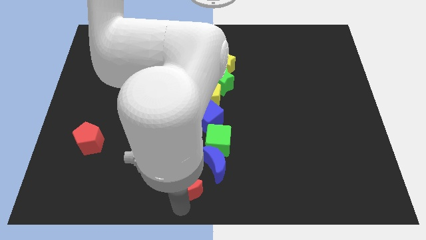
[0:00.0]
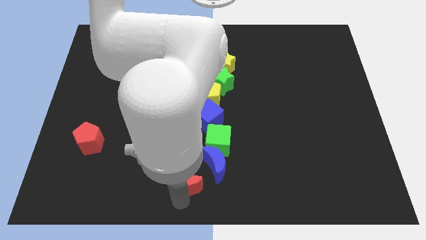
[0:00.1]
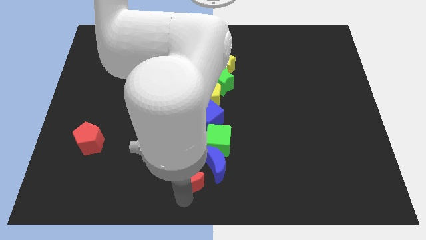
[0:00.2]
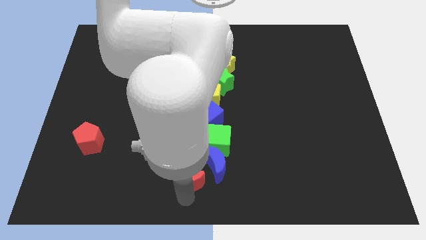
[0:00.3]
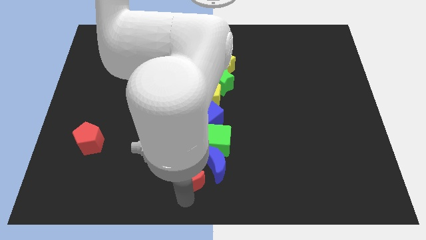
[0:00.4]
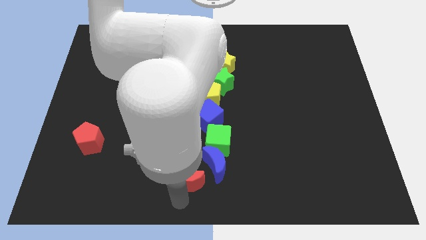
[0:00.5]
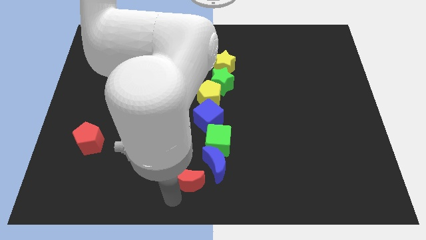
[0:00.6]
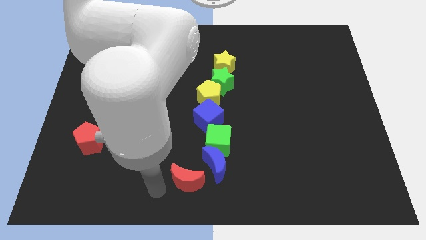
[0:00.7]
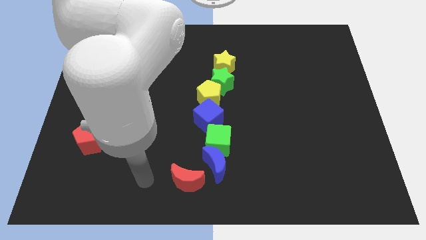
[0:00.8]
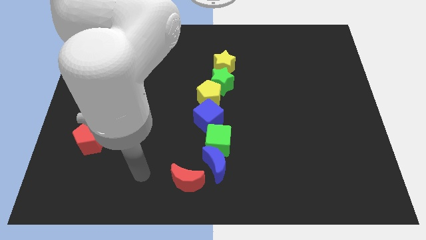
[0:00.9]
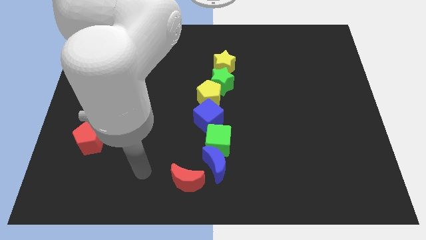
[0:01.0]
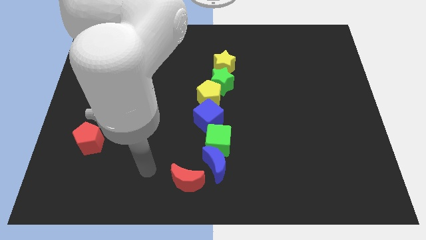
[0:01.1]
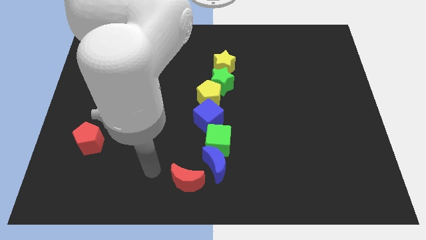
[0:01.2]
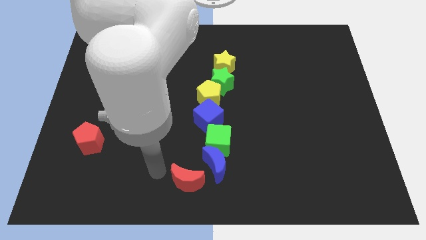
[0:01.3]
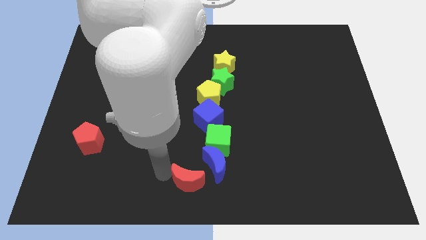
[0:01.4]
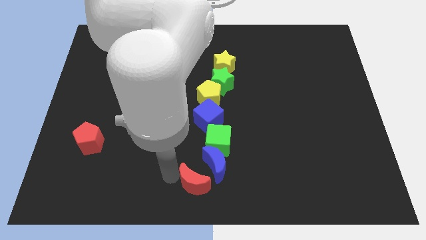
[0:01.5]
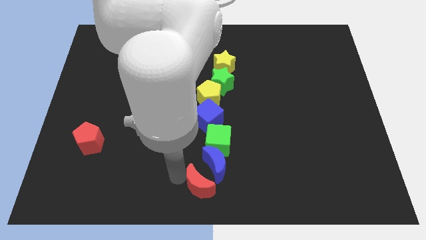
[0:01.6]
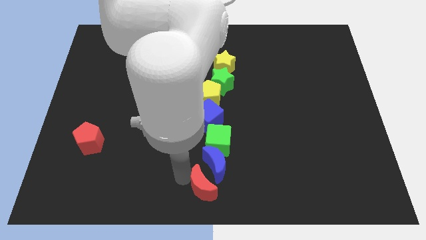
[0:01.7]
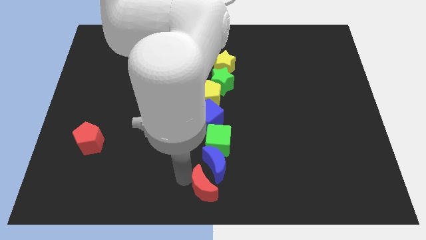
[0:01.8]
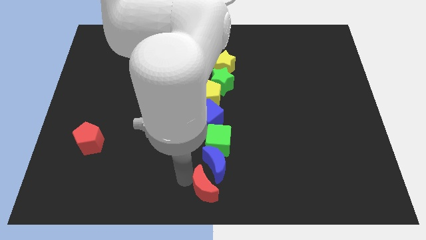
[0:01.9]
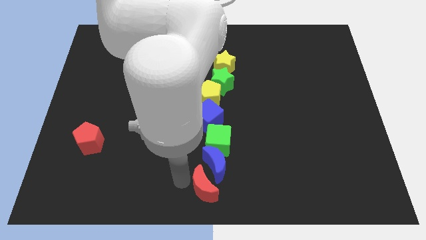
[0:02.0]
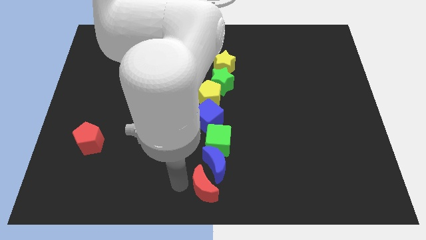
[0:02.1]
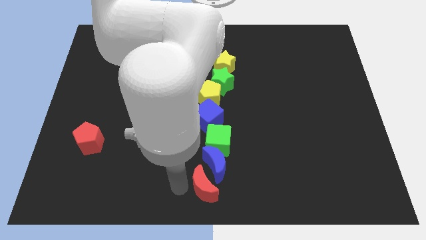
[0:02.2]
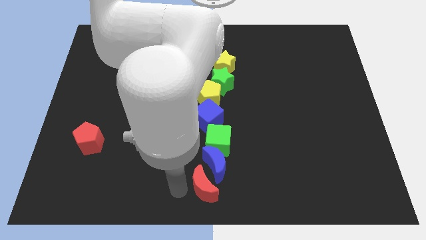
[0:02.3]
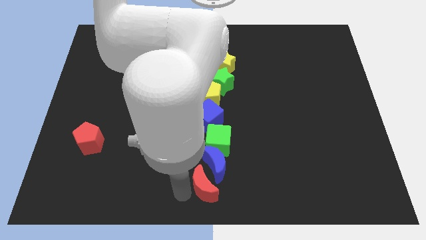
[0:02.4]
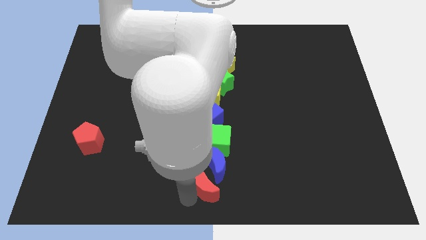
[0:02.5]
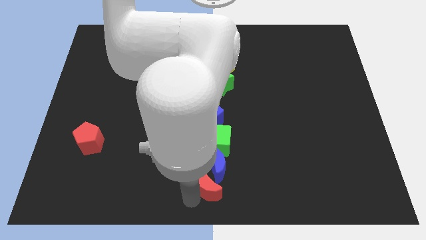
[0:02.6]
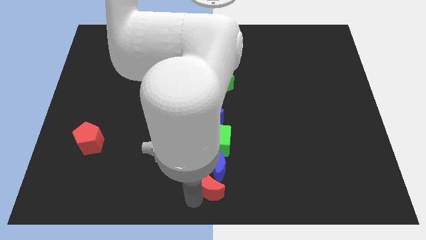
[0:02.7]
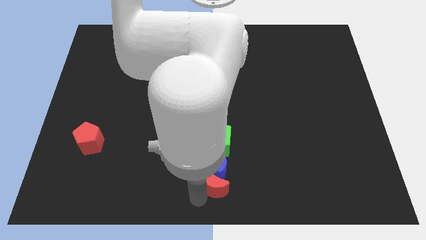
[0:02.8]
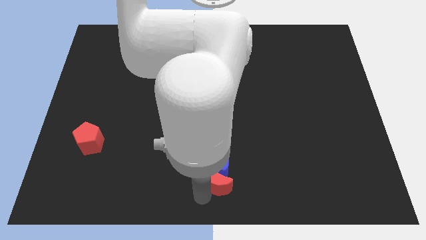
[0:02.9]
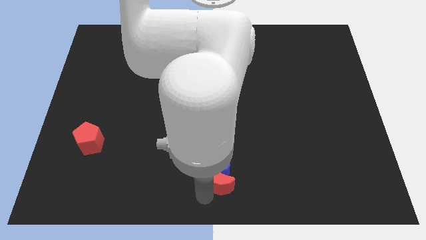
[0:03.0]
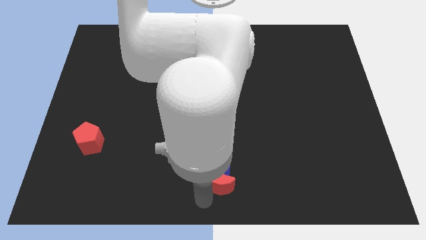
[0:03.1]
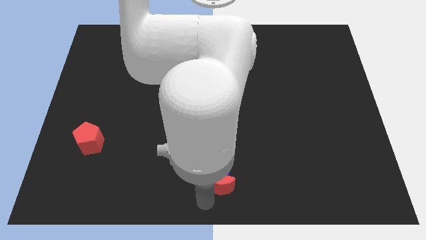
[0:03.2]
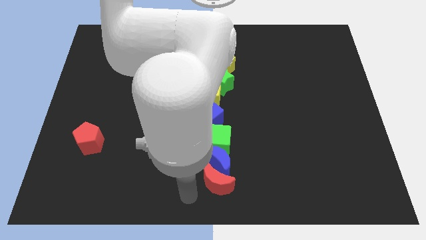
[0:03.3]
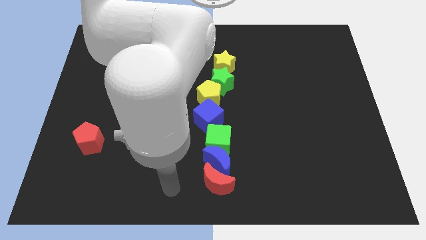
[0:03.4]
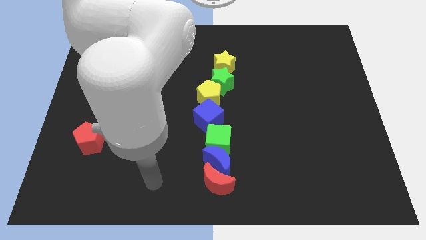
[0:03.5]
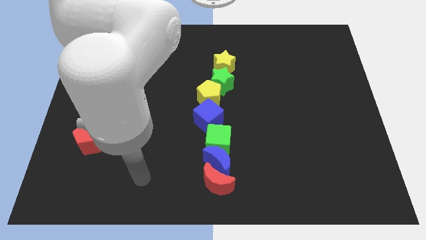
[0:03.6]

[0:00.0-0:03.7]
push the red crescent into the blue crescent

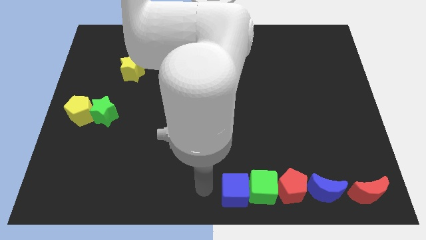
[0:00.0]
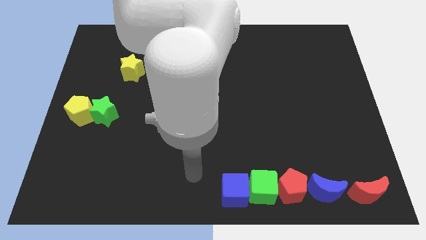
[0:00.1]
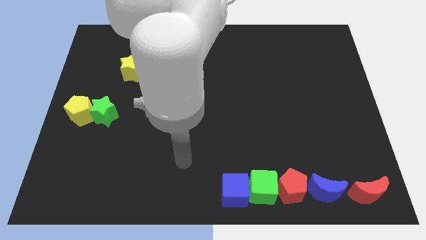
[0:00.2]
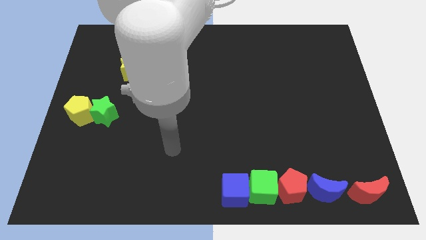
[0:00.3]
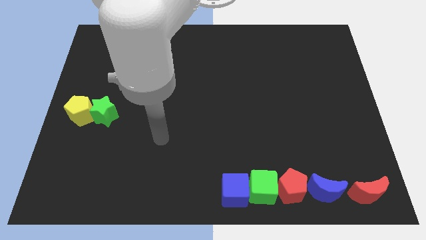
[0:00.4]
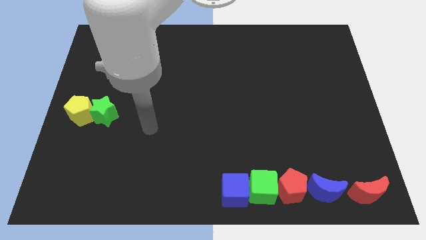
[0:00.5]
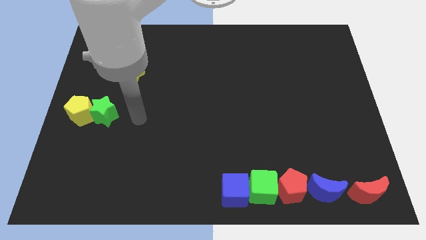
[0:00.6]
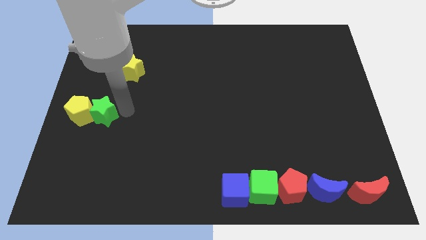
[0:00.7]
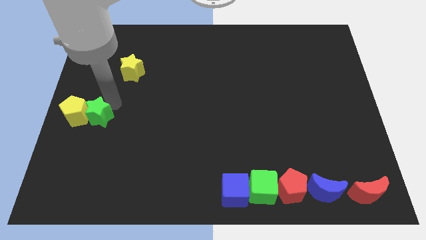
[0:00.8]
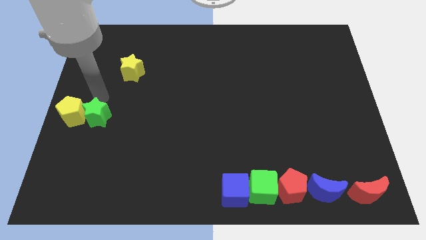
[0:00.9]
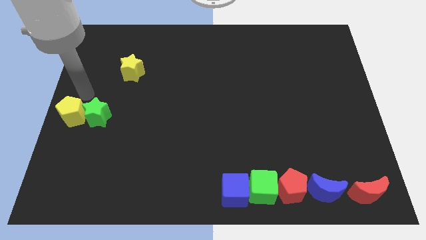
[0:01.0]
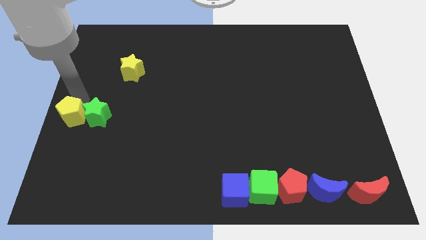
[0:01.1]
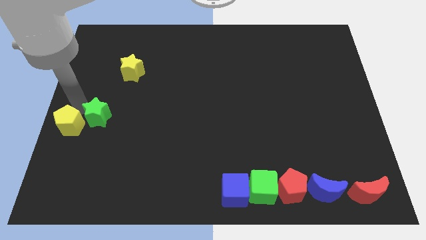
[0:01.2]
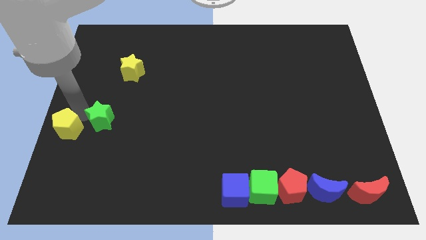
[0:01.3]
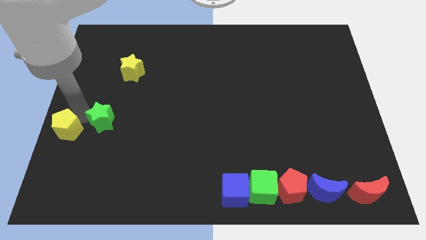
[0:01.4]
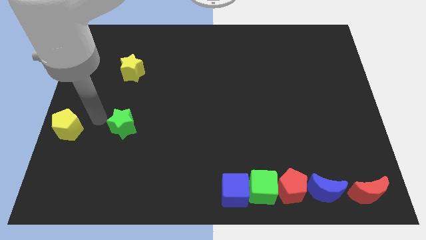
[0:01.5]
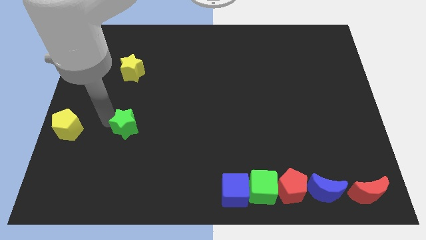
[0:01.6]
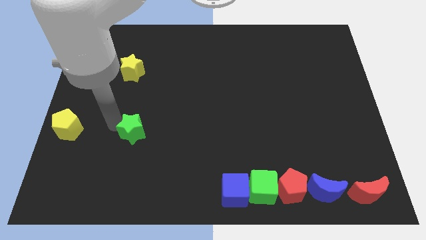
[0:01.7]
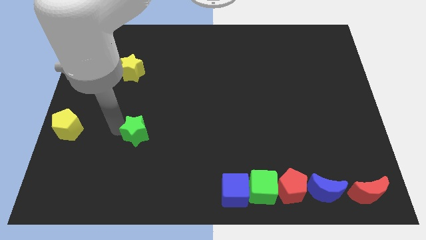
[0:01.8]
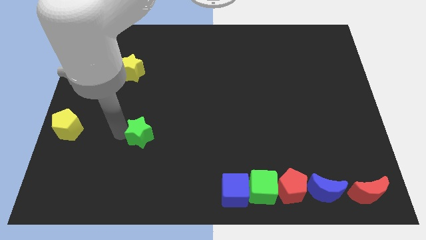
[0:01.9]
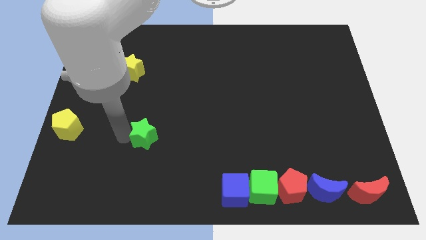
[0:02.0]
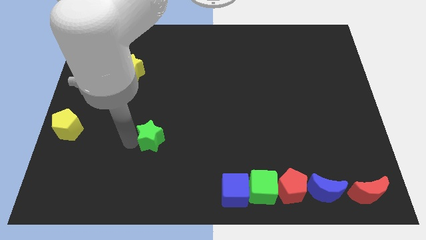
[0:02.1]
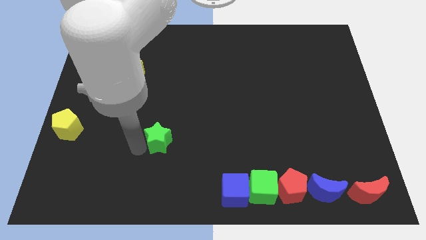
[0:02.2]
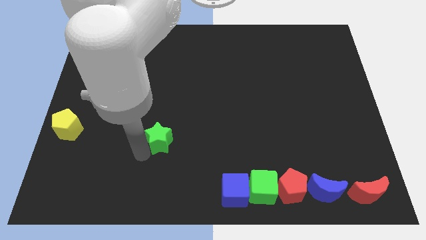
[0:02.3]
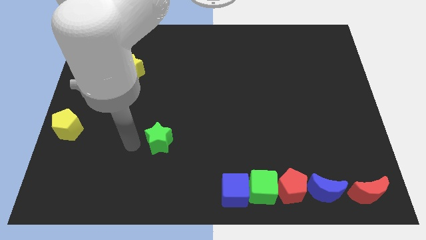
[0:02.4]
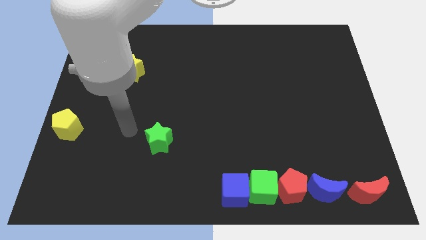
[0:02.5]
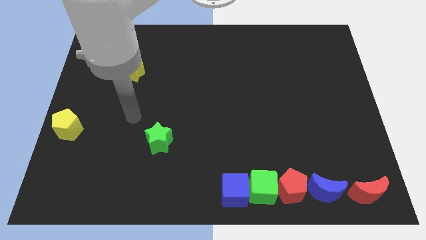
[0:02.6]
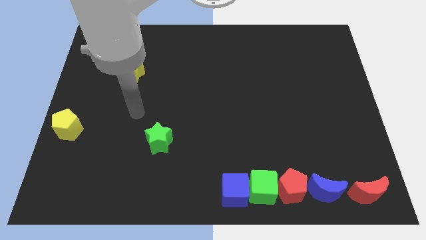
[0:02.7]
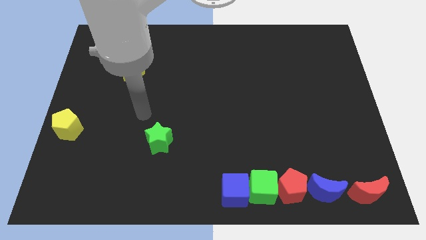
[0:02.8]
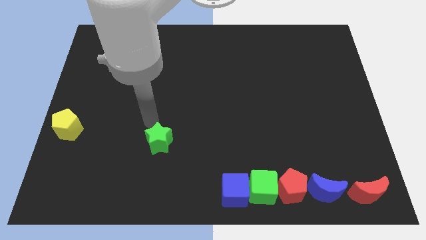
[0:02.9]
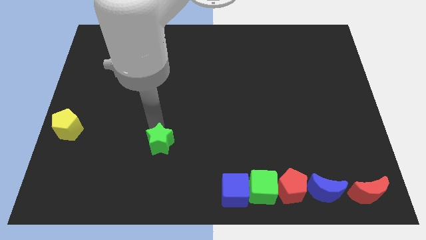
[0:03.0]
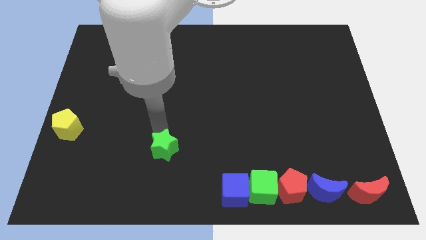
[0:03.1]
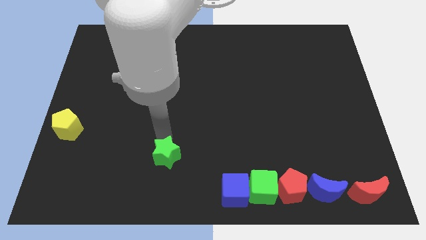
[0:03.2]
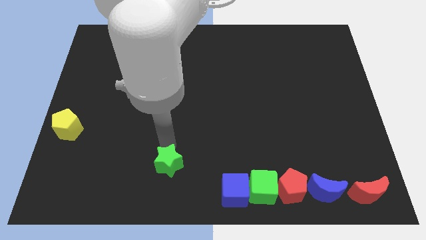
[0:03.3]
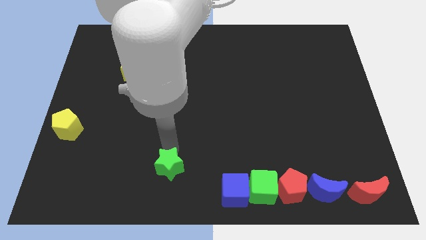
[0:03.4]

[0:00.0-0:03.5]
separate the green star from yellow pentagon

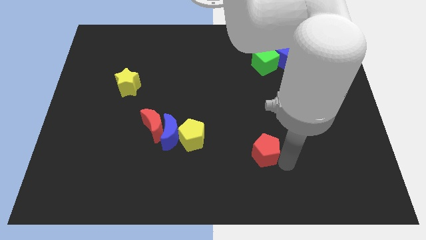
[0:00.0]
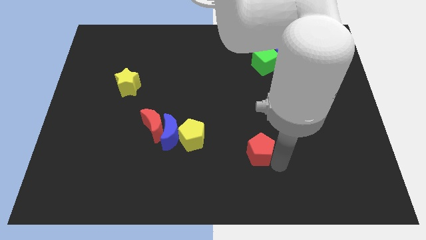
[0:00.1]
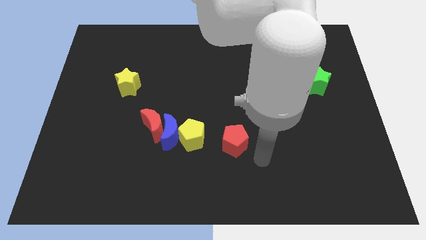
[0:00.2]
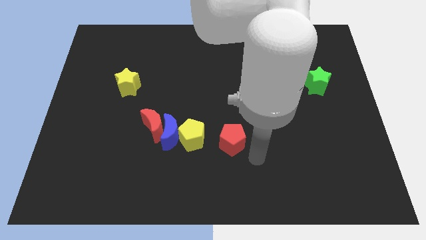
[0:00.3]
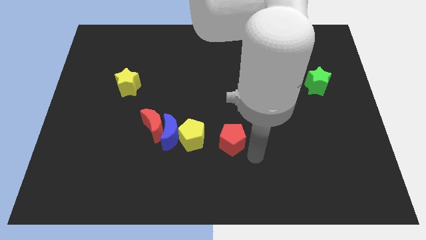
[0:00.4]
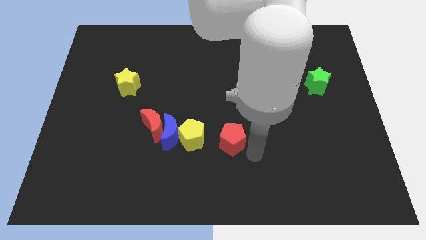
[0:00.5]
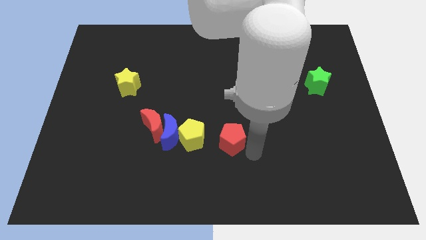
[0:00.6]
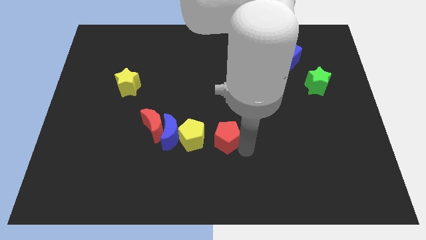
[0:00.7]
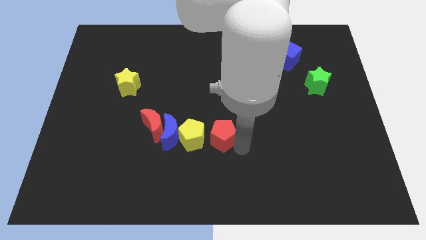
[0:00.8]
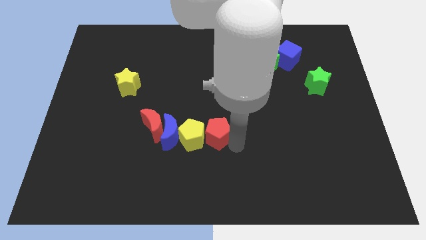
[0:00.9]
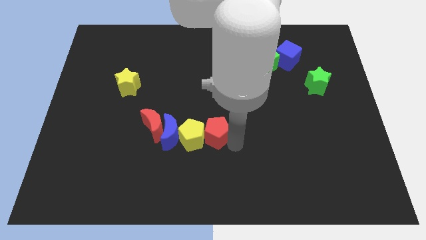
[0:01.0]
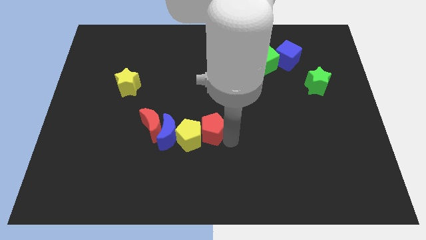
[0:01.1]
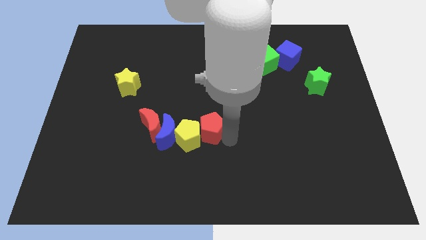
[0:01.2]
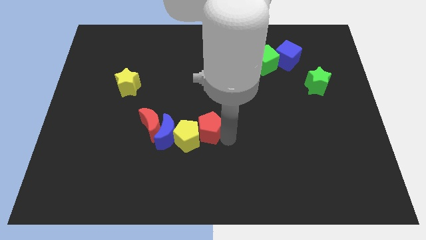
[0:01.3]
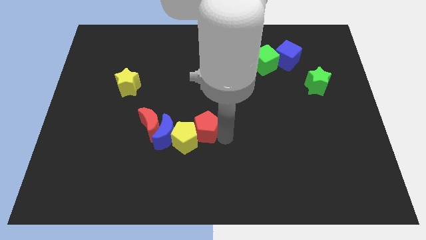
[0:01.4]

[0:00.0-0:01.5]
place red pentagon to the top right of red pentagon

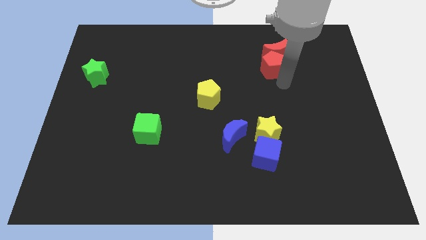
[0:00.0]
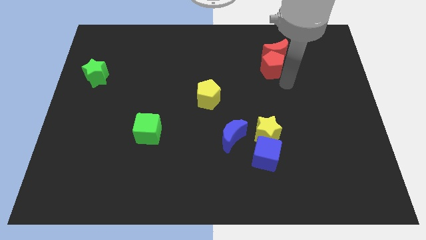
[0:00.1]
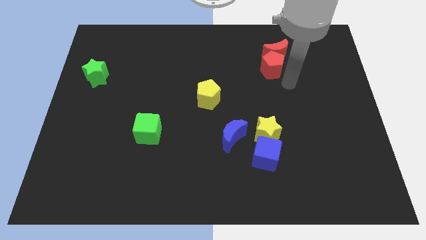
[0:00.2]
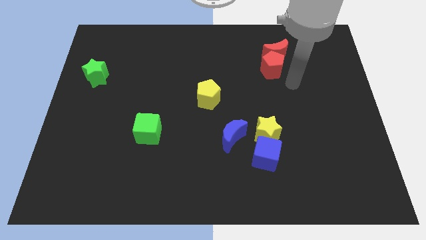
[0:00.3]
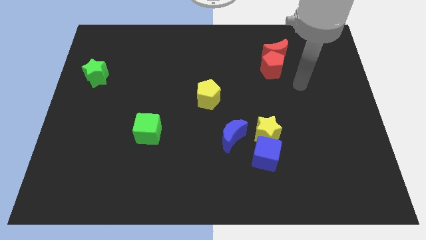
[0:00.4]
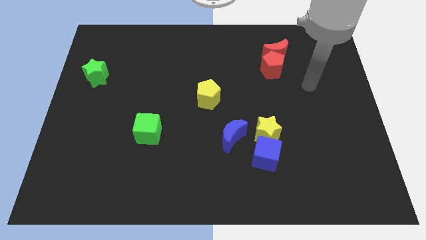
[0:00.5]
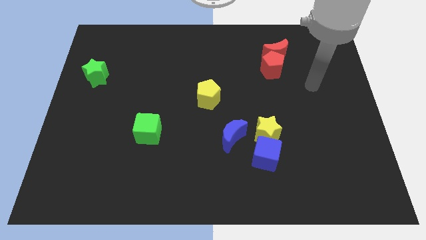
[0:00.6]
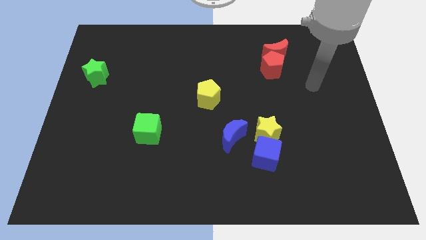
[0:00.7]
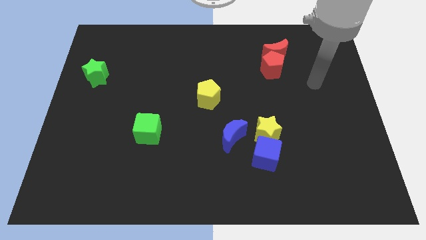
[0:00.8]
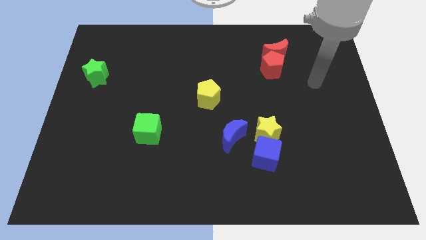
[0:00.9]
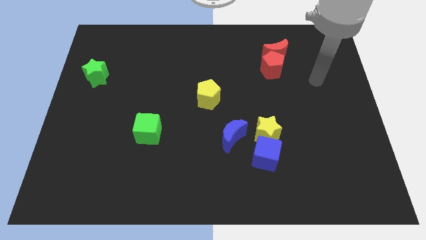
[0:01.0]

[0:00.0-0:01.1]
move your hand away from red pentagon
